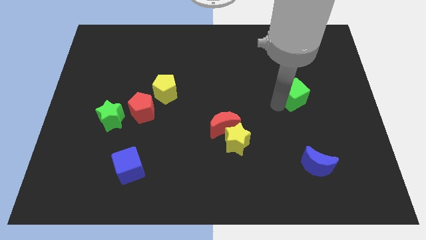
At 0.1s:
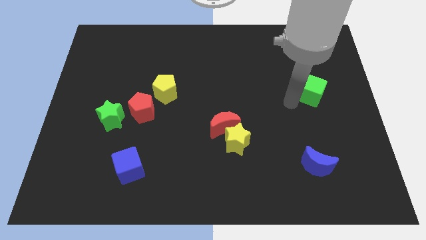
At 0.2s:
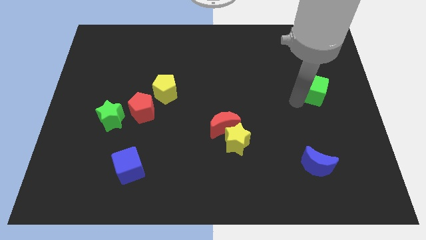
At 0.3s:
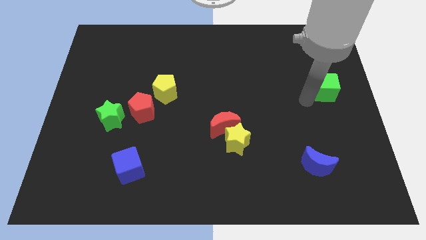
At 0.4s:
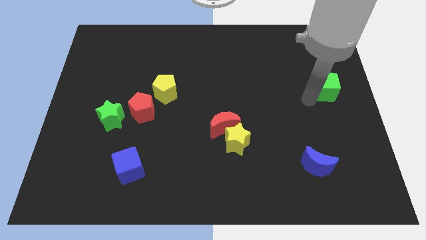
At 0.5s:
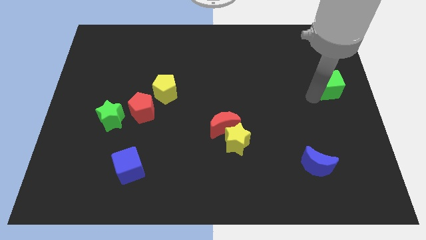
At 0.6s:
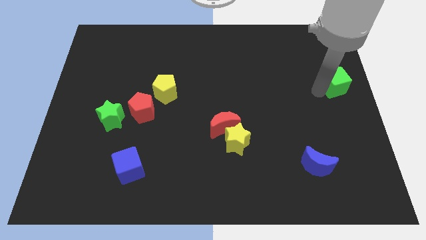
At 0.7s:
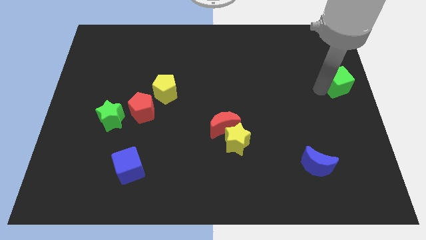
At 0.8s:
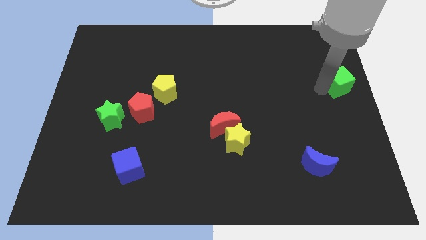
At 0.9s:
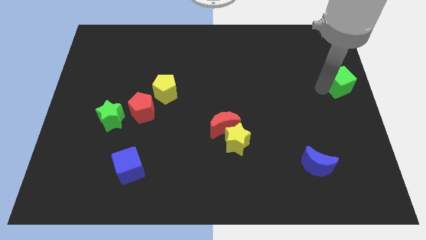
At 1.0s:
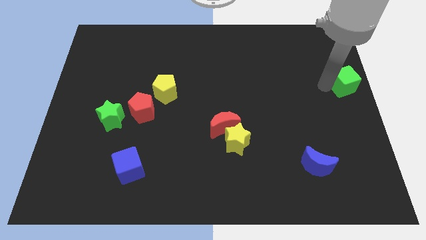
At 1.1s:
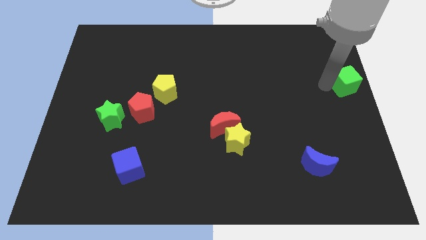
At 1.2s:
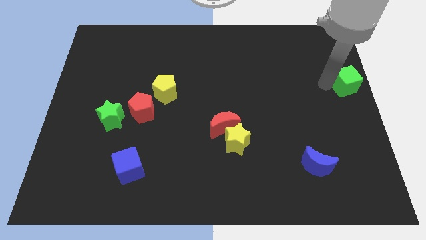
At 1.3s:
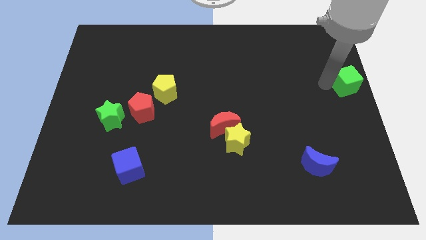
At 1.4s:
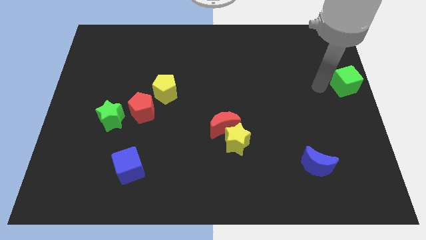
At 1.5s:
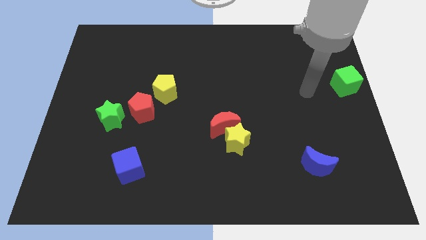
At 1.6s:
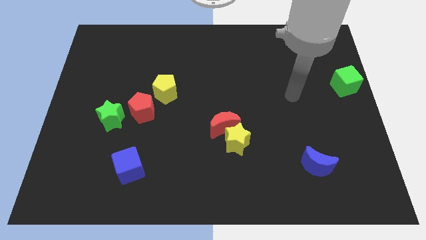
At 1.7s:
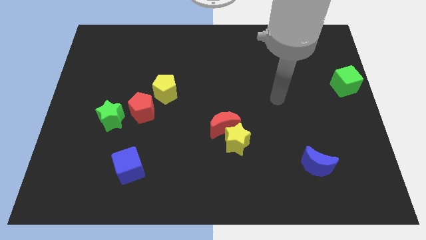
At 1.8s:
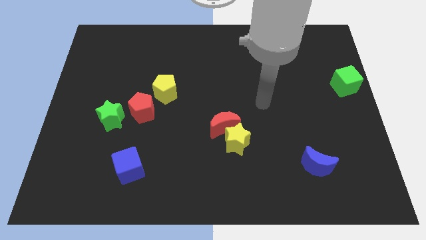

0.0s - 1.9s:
push the green cube to the center right side of the board

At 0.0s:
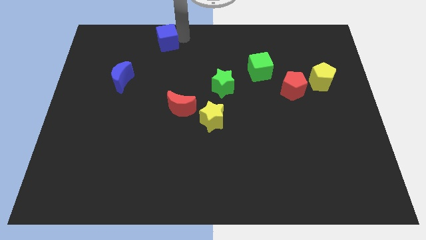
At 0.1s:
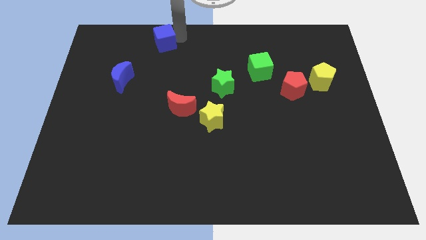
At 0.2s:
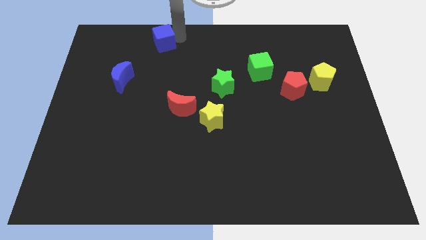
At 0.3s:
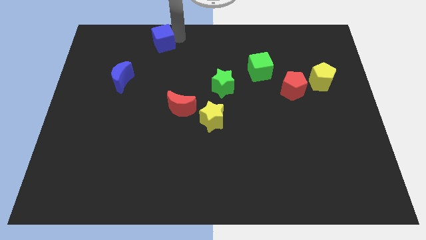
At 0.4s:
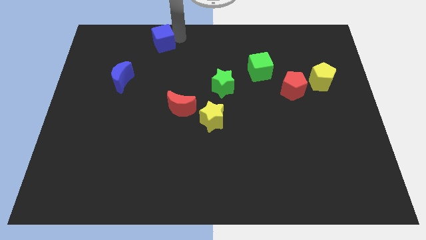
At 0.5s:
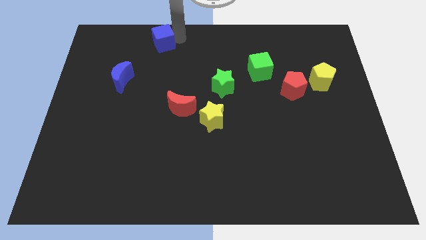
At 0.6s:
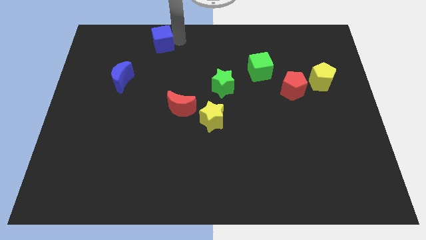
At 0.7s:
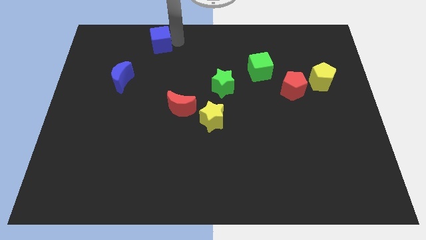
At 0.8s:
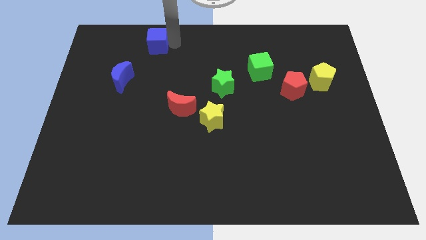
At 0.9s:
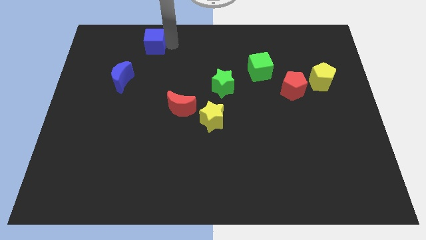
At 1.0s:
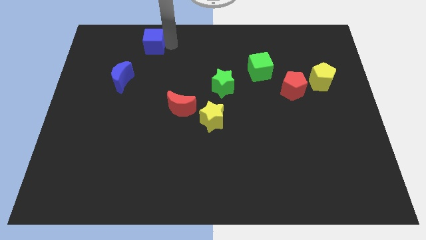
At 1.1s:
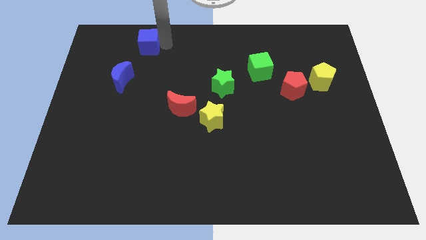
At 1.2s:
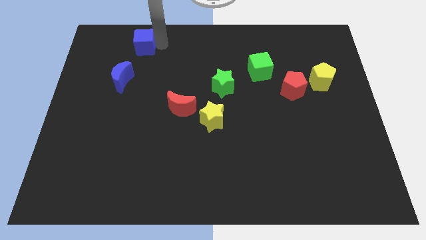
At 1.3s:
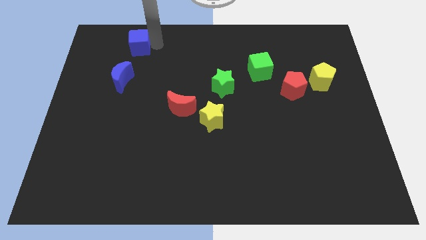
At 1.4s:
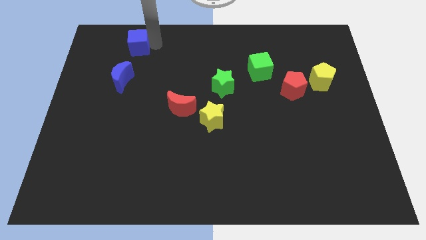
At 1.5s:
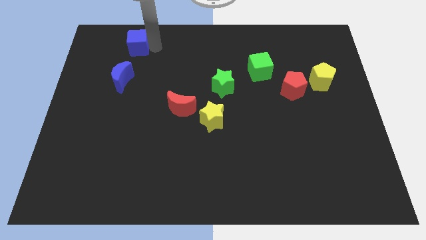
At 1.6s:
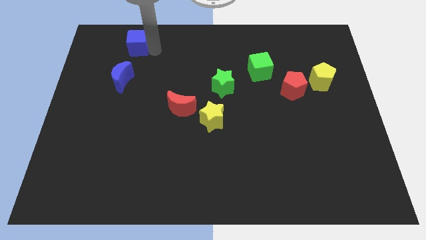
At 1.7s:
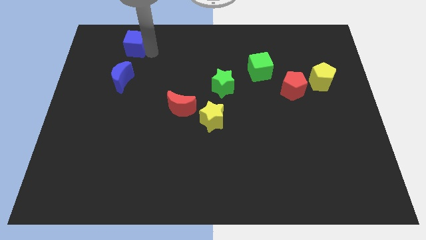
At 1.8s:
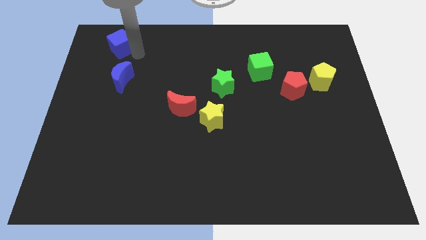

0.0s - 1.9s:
place blue cube to the top of the blue moon

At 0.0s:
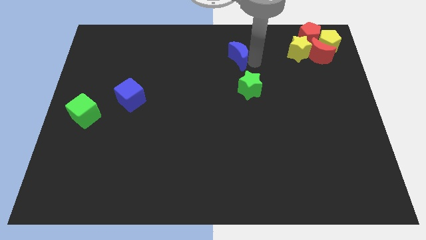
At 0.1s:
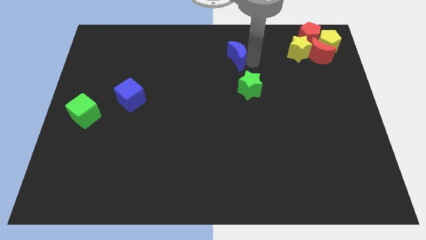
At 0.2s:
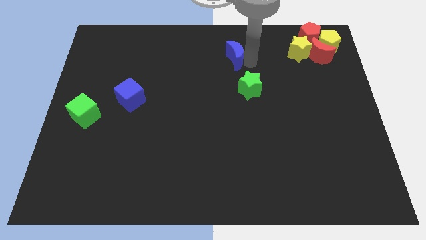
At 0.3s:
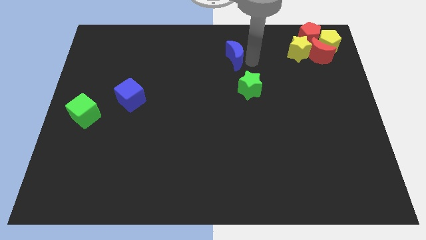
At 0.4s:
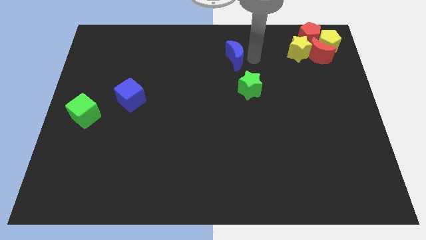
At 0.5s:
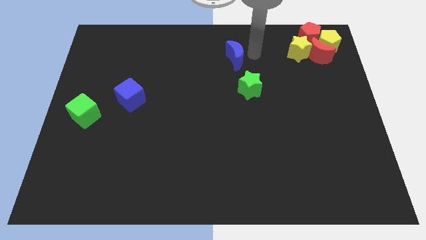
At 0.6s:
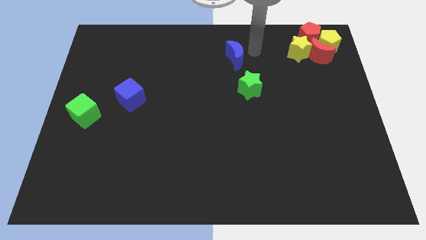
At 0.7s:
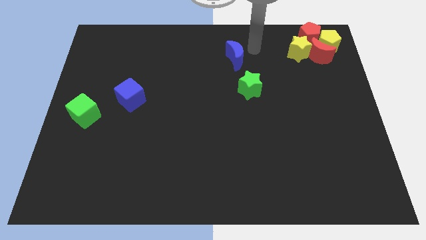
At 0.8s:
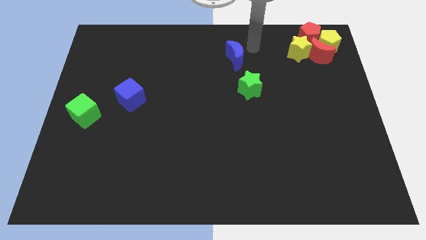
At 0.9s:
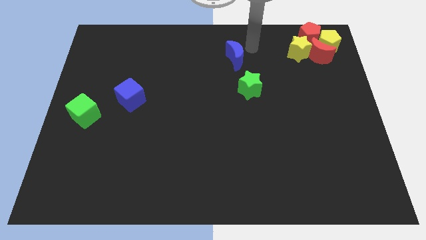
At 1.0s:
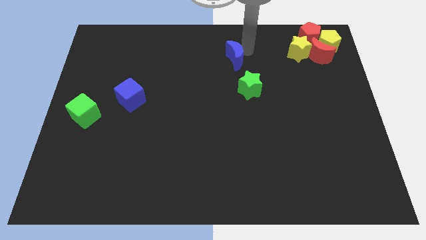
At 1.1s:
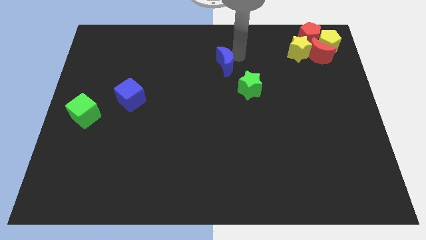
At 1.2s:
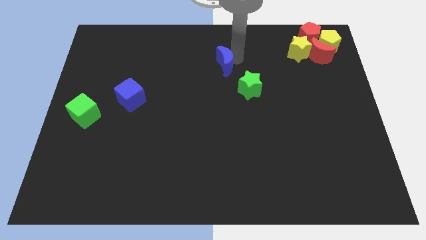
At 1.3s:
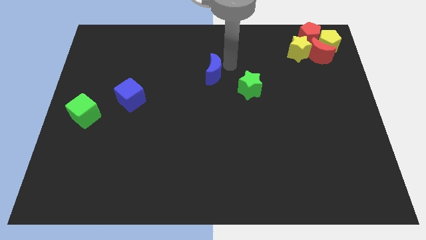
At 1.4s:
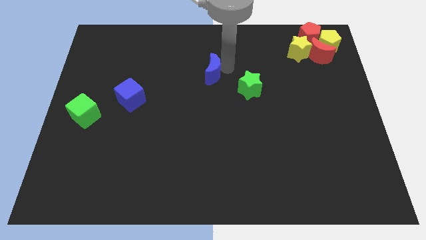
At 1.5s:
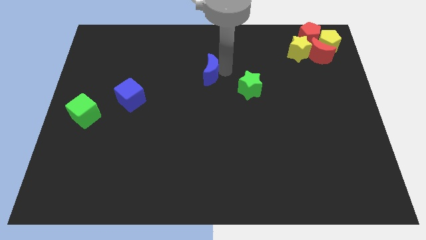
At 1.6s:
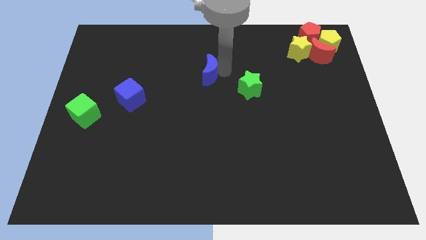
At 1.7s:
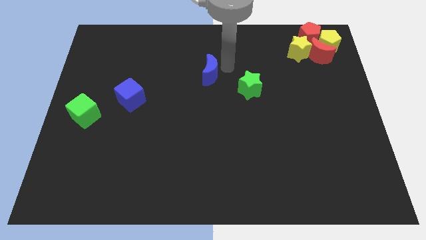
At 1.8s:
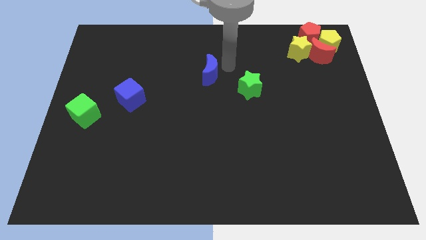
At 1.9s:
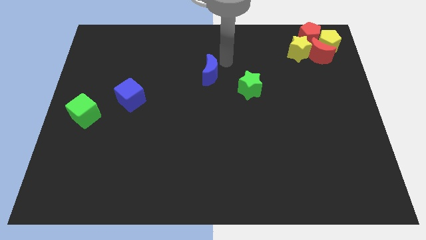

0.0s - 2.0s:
push the blue crescent diagonally on the top left side of the green star

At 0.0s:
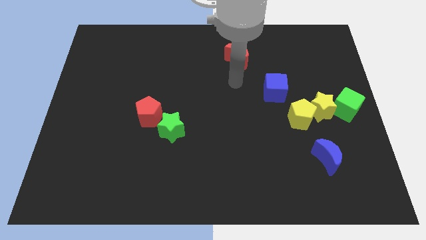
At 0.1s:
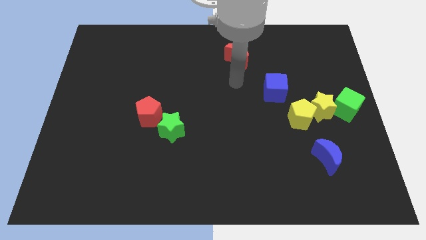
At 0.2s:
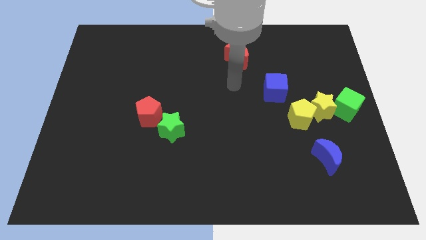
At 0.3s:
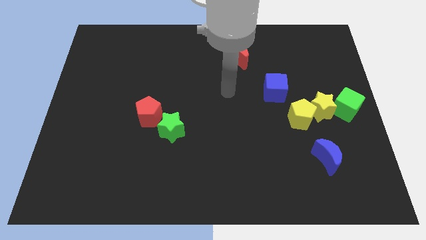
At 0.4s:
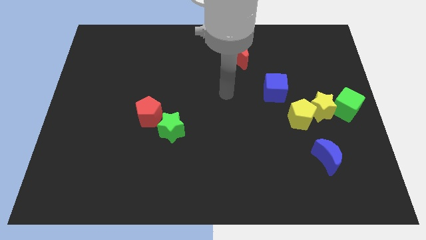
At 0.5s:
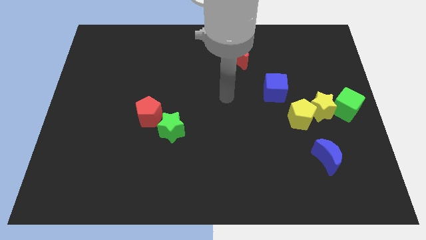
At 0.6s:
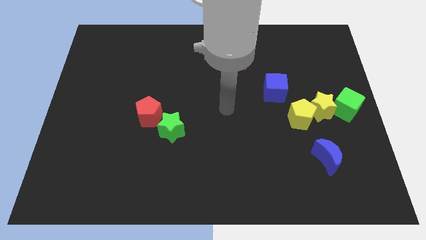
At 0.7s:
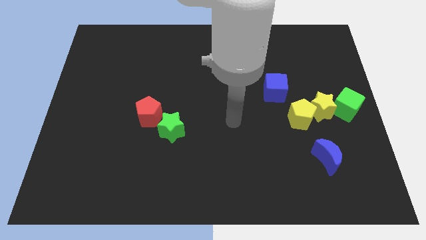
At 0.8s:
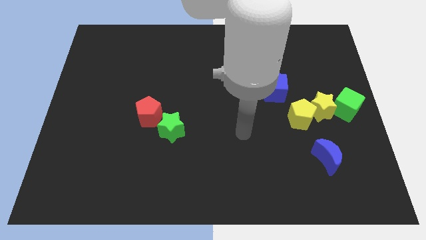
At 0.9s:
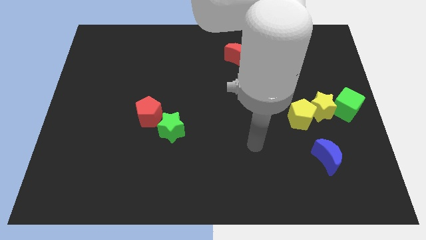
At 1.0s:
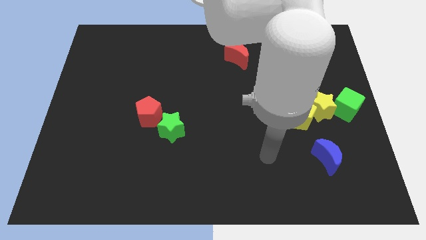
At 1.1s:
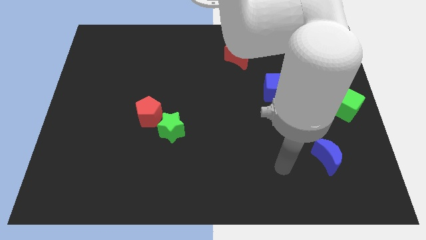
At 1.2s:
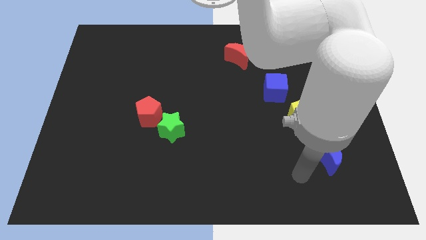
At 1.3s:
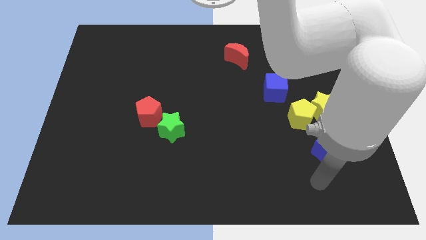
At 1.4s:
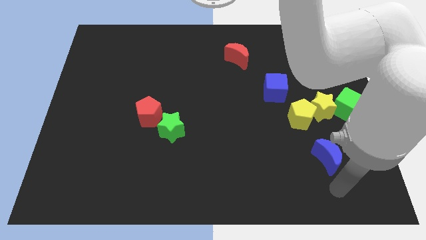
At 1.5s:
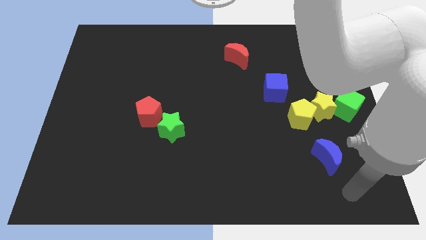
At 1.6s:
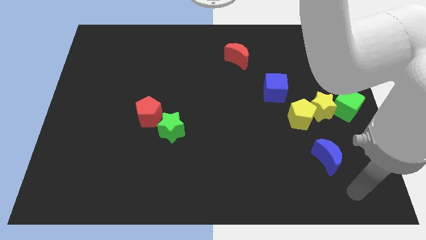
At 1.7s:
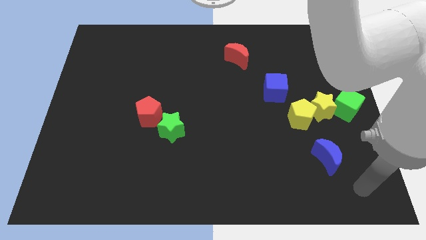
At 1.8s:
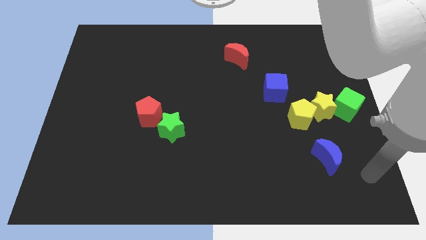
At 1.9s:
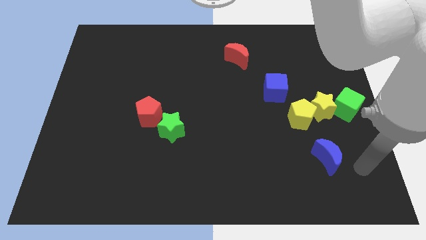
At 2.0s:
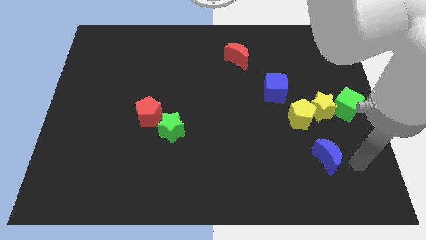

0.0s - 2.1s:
place your arm at the right of the blue crescent

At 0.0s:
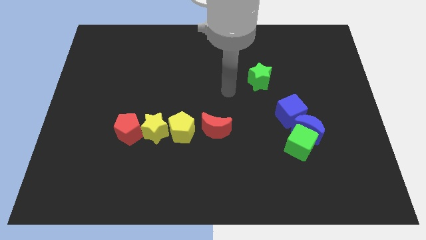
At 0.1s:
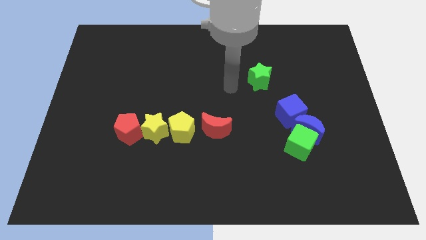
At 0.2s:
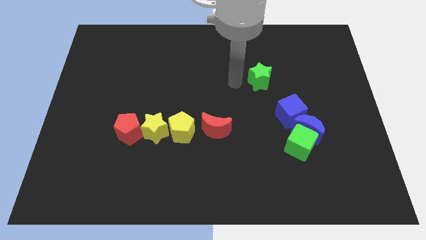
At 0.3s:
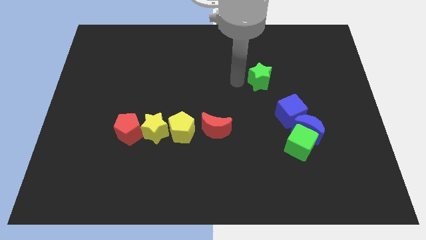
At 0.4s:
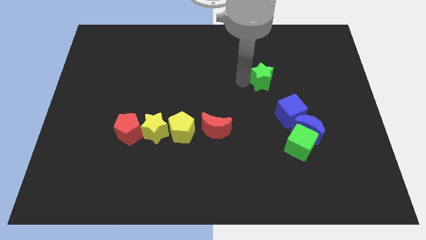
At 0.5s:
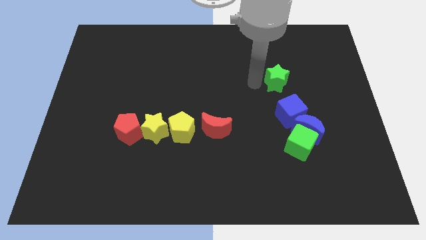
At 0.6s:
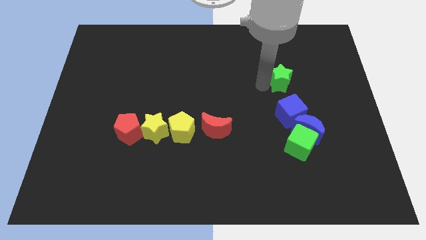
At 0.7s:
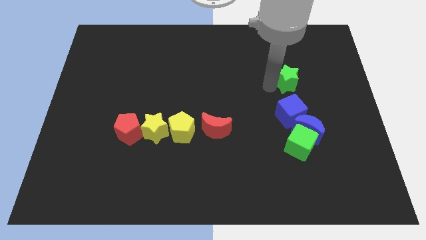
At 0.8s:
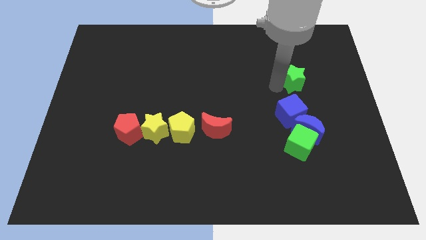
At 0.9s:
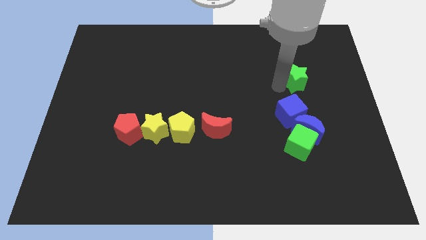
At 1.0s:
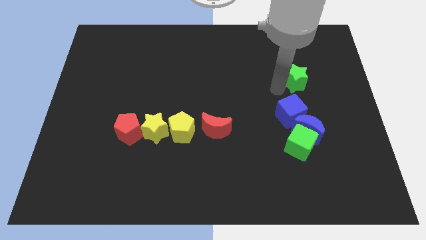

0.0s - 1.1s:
slide green star on top of blue cube
